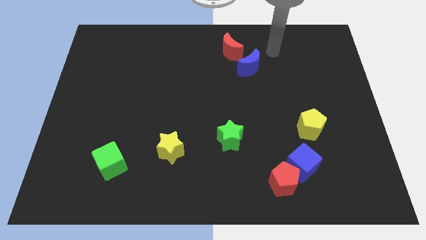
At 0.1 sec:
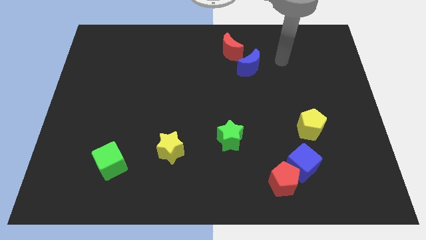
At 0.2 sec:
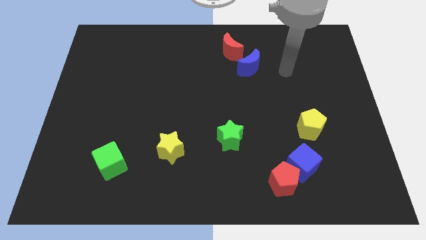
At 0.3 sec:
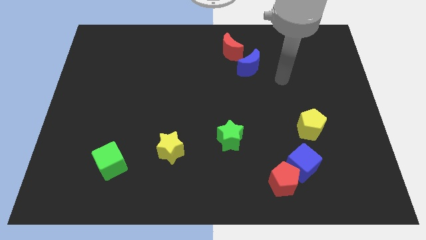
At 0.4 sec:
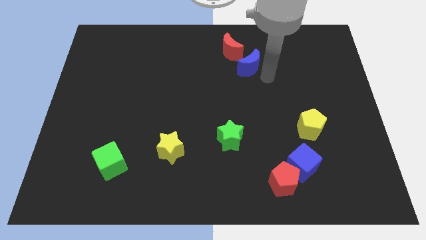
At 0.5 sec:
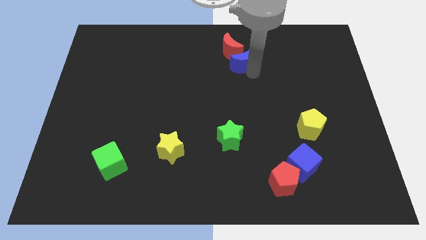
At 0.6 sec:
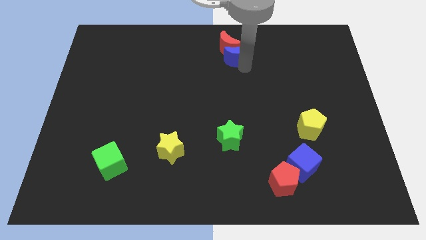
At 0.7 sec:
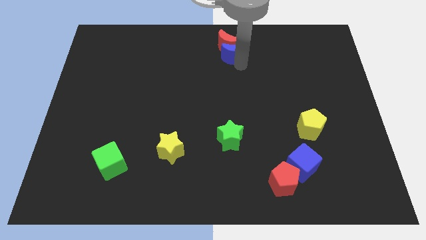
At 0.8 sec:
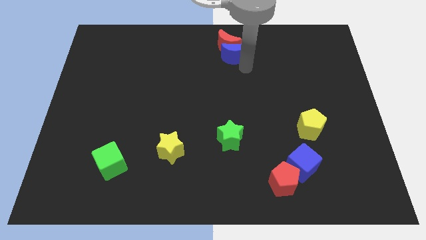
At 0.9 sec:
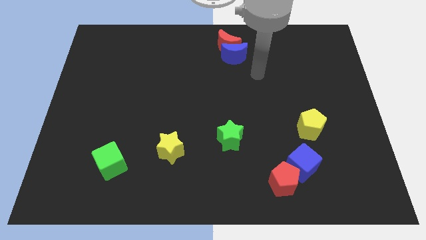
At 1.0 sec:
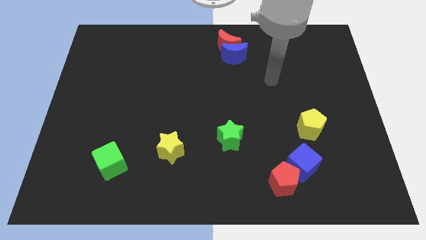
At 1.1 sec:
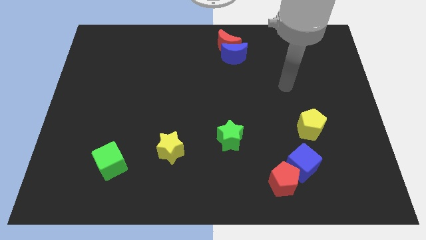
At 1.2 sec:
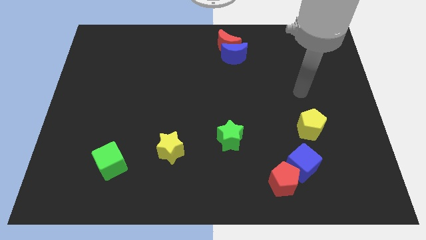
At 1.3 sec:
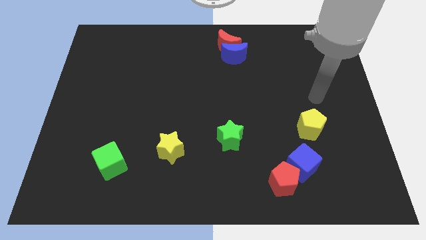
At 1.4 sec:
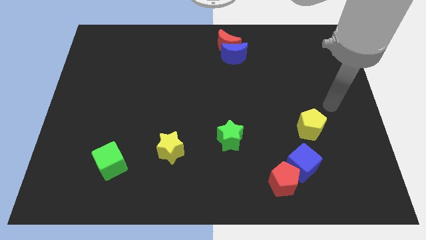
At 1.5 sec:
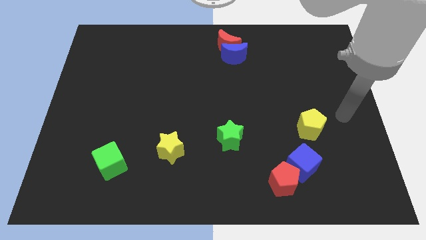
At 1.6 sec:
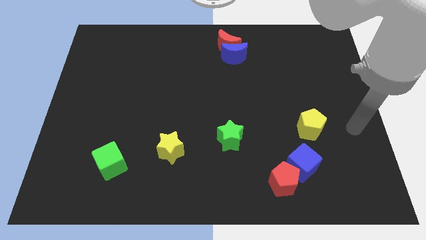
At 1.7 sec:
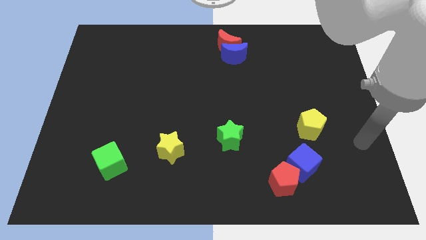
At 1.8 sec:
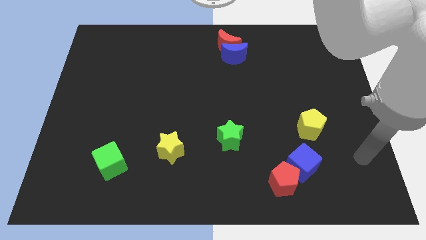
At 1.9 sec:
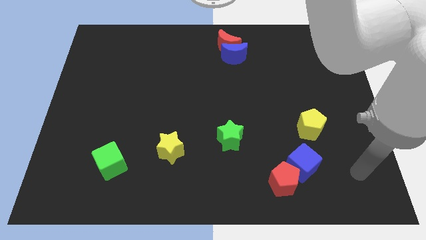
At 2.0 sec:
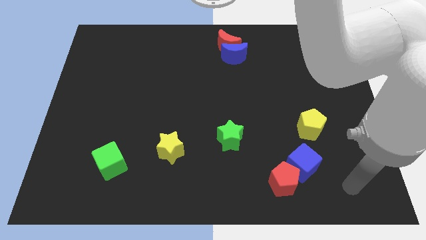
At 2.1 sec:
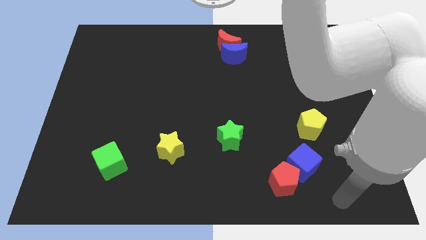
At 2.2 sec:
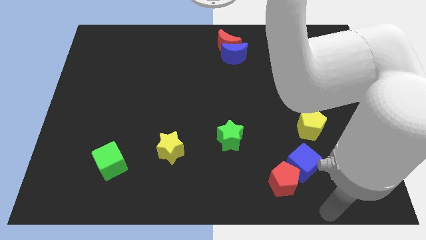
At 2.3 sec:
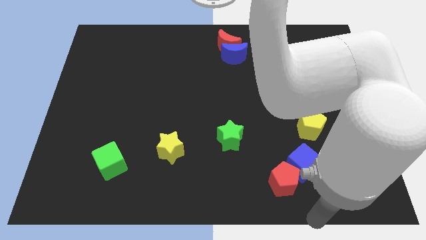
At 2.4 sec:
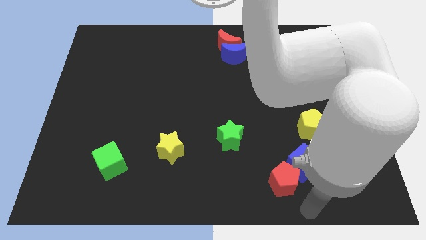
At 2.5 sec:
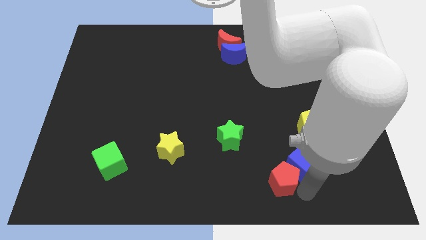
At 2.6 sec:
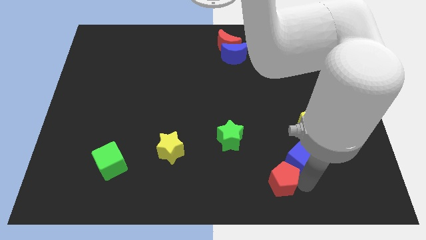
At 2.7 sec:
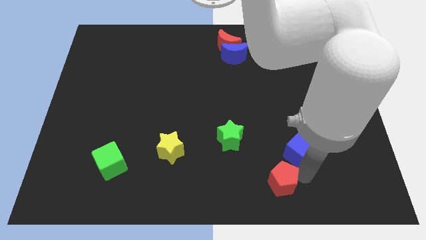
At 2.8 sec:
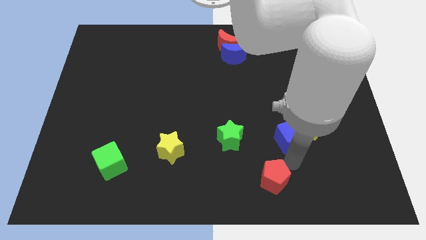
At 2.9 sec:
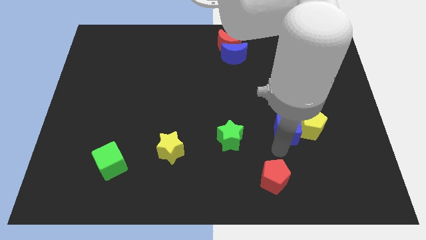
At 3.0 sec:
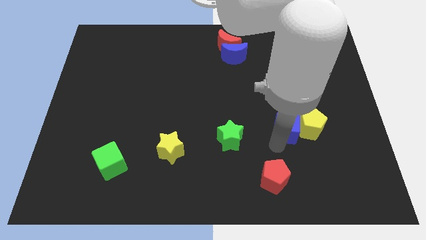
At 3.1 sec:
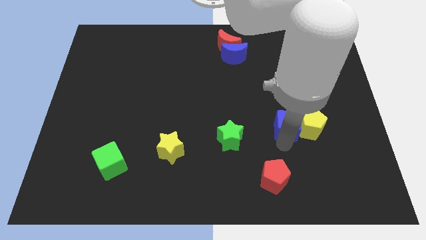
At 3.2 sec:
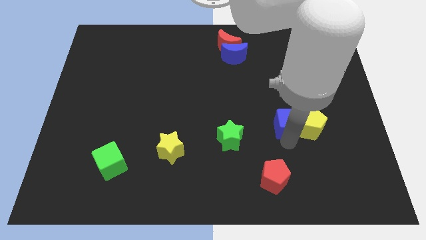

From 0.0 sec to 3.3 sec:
push the blue cube up slightly

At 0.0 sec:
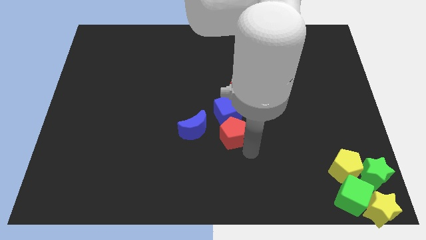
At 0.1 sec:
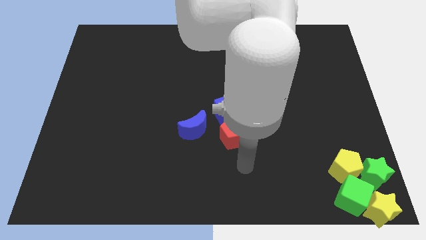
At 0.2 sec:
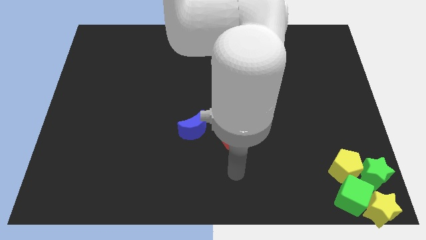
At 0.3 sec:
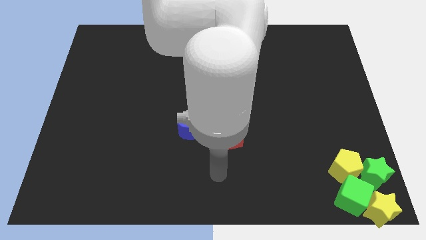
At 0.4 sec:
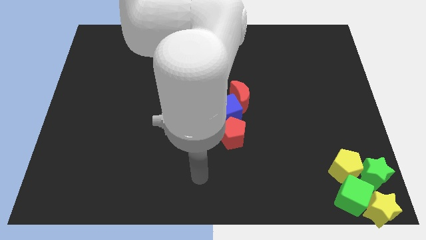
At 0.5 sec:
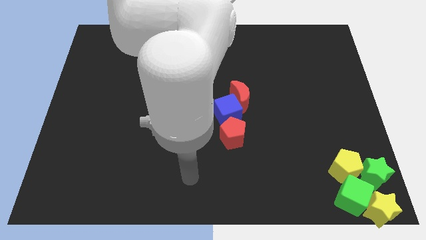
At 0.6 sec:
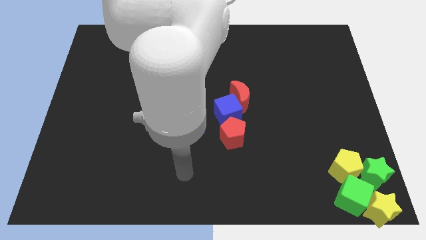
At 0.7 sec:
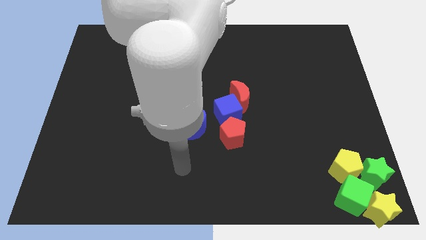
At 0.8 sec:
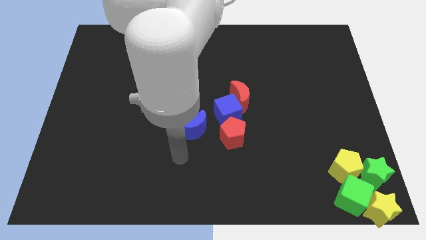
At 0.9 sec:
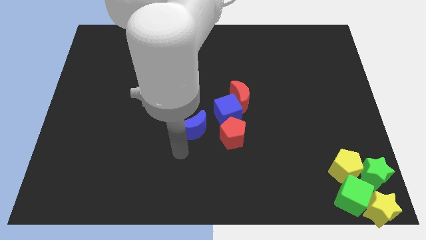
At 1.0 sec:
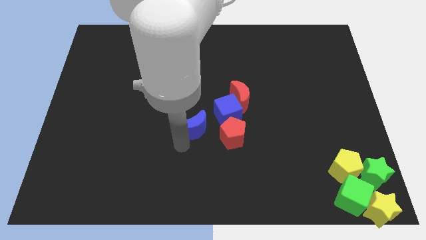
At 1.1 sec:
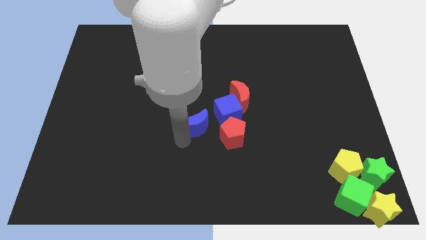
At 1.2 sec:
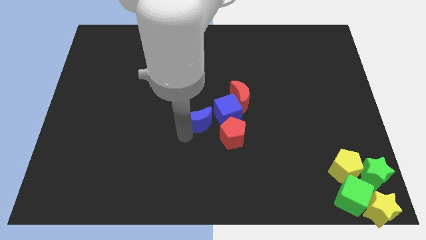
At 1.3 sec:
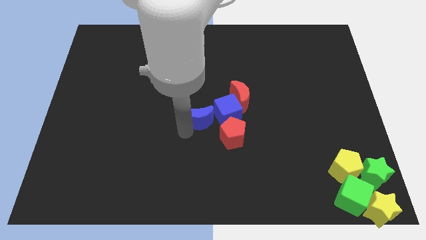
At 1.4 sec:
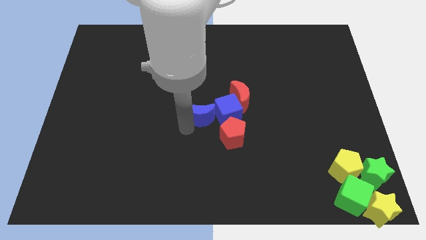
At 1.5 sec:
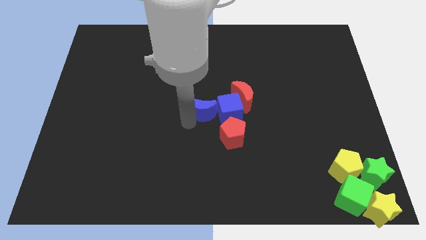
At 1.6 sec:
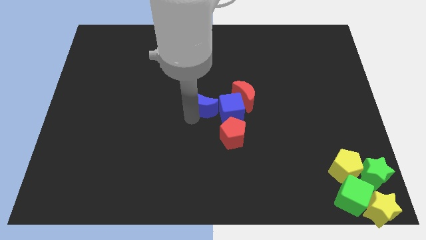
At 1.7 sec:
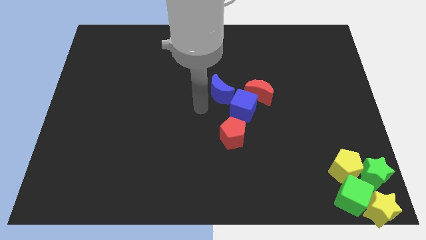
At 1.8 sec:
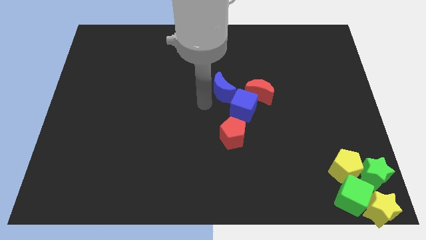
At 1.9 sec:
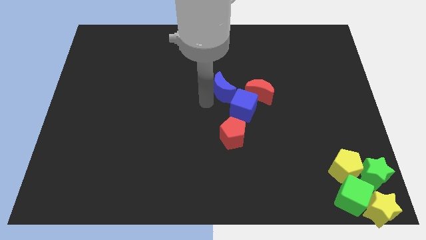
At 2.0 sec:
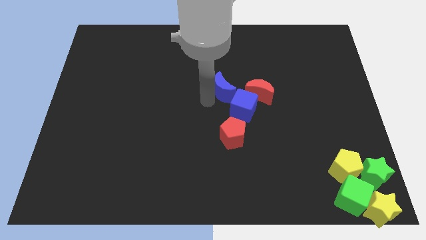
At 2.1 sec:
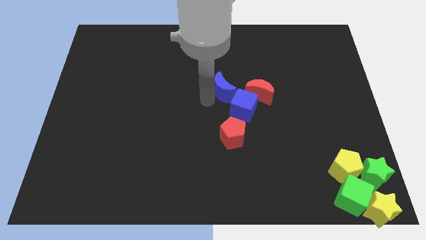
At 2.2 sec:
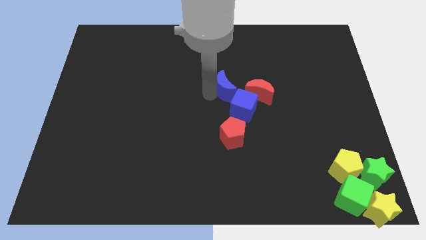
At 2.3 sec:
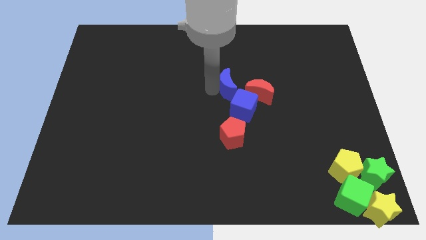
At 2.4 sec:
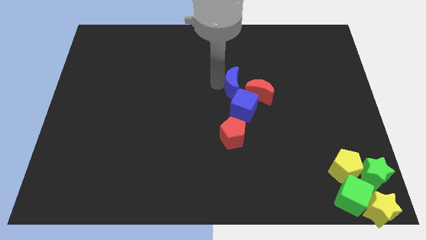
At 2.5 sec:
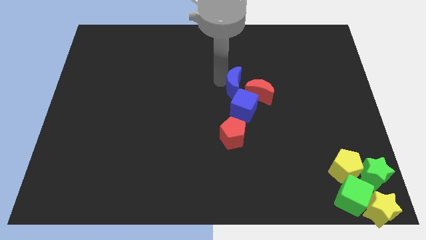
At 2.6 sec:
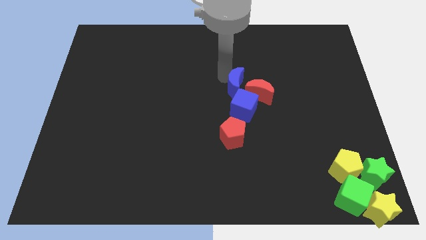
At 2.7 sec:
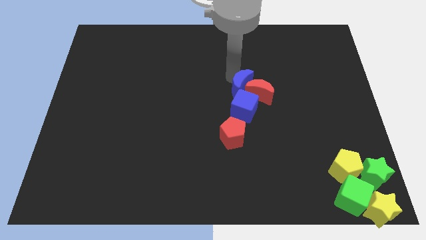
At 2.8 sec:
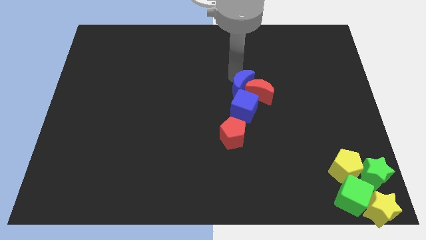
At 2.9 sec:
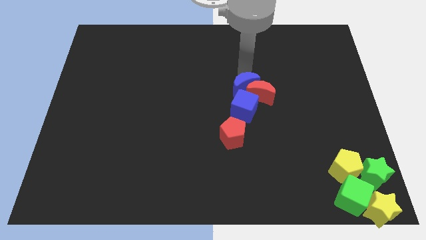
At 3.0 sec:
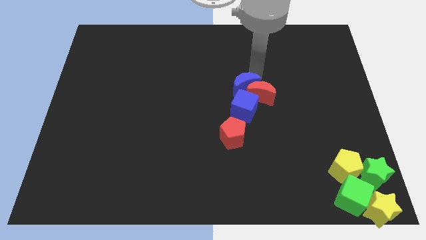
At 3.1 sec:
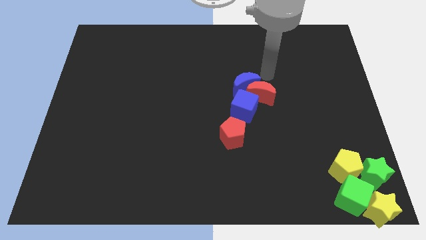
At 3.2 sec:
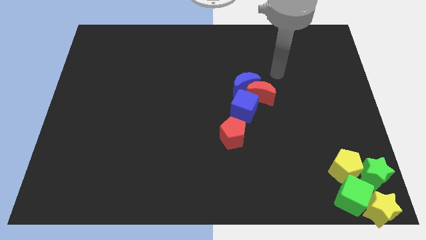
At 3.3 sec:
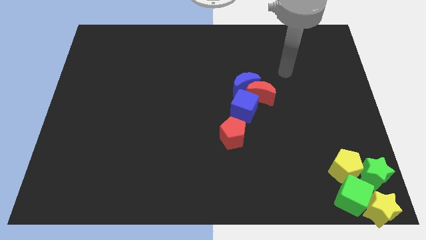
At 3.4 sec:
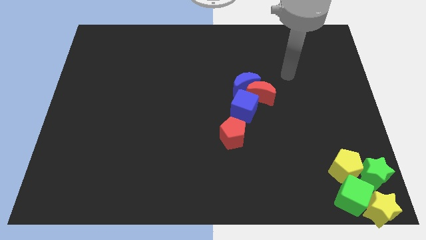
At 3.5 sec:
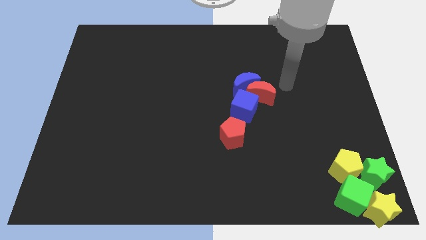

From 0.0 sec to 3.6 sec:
move the blue moon to the top of the blue cube

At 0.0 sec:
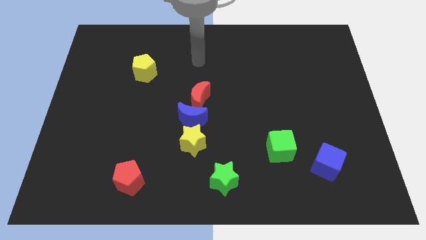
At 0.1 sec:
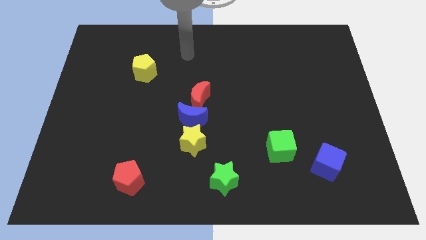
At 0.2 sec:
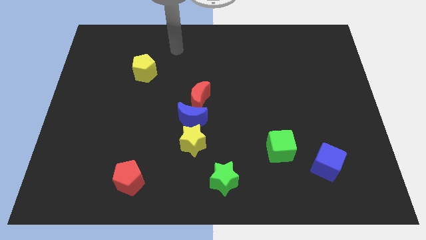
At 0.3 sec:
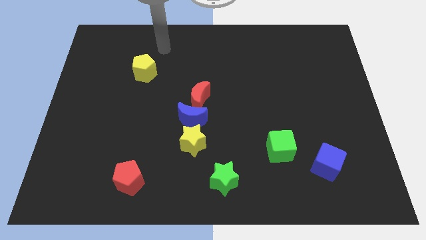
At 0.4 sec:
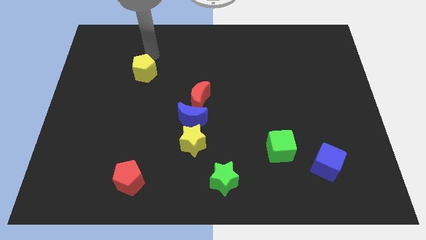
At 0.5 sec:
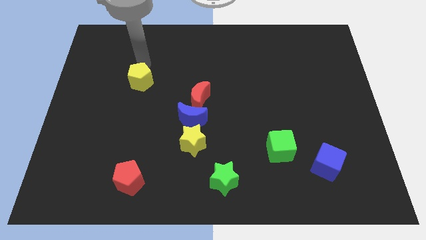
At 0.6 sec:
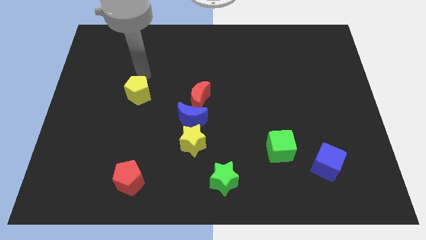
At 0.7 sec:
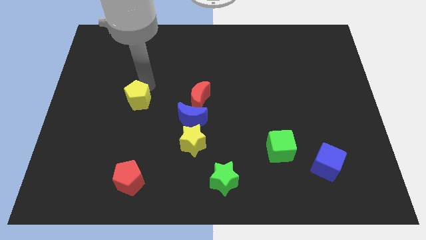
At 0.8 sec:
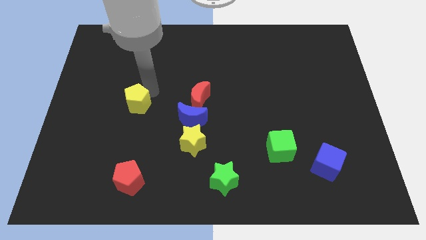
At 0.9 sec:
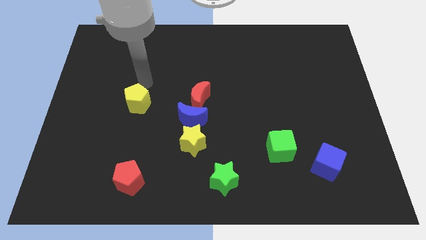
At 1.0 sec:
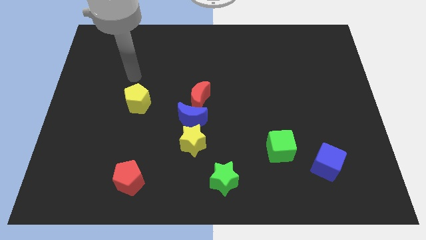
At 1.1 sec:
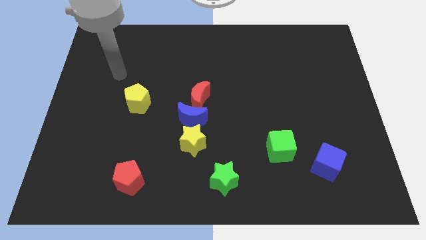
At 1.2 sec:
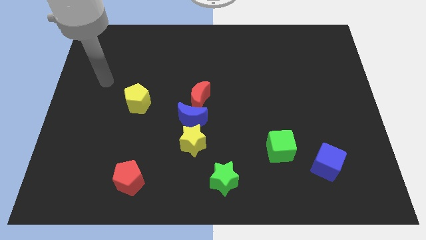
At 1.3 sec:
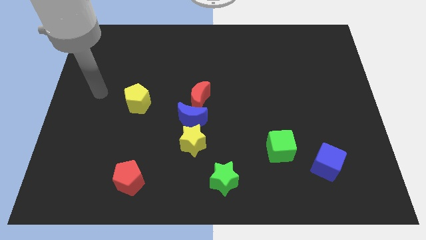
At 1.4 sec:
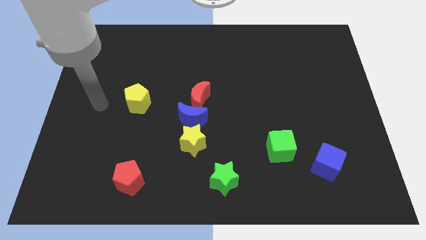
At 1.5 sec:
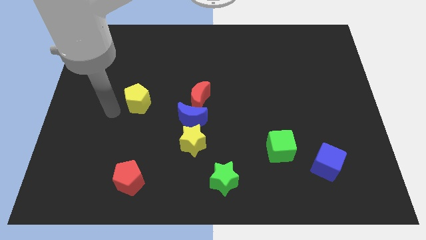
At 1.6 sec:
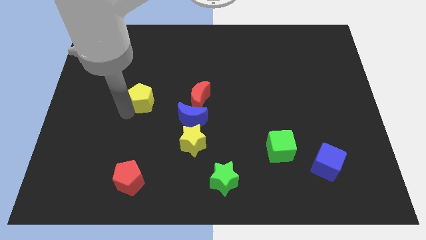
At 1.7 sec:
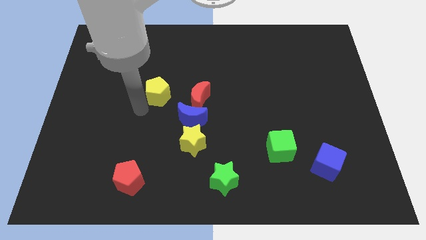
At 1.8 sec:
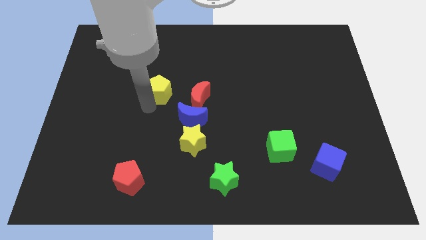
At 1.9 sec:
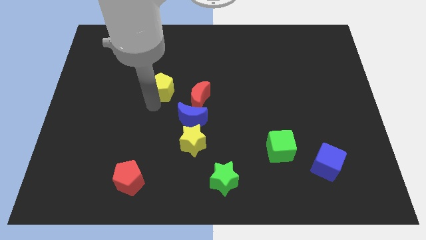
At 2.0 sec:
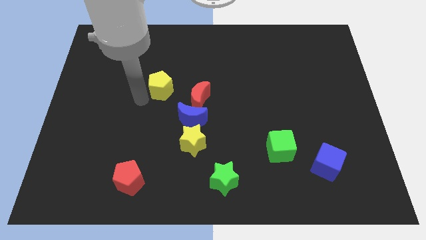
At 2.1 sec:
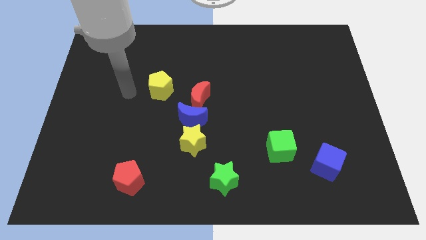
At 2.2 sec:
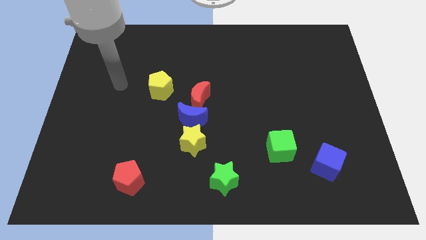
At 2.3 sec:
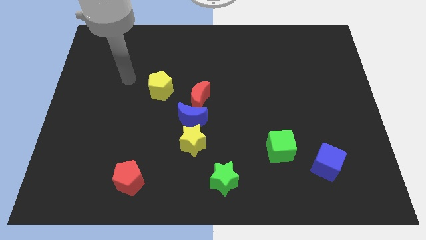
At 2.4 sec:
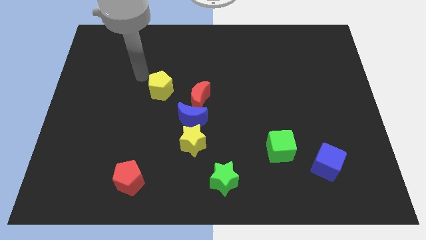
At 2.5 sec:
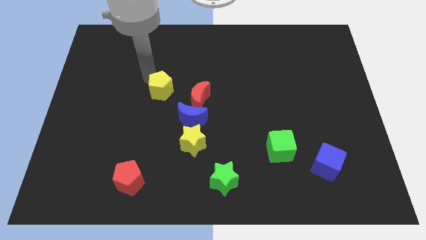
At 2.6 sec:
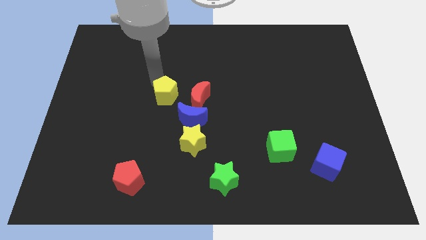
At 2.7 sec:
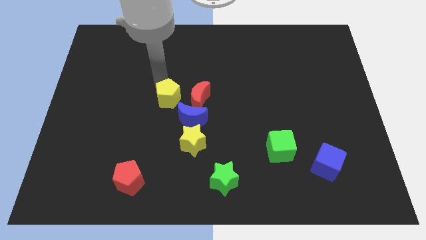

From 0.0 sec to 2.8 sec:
place yellow pentagon parallel left to red moon
